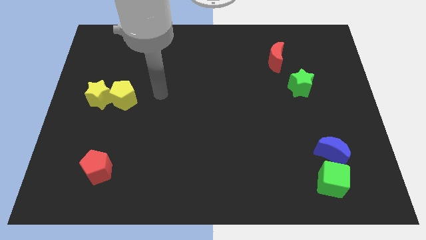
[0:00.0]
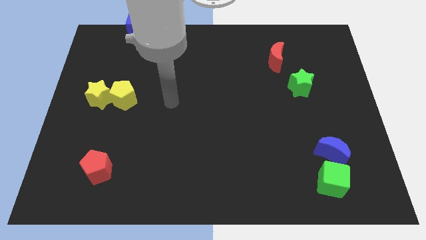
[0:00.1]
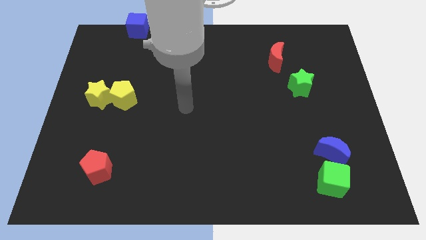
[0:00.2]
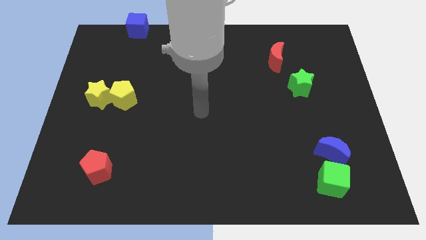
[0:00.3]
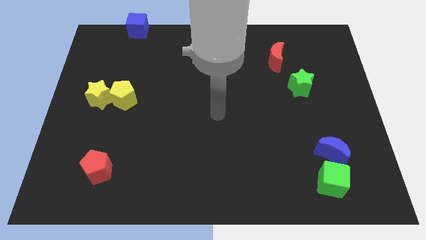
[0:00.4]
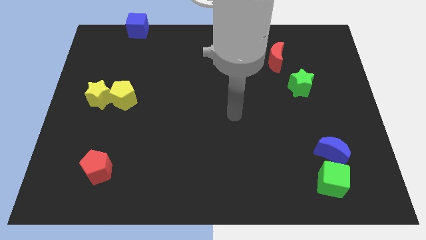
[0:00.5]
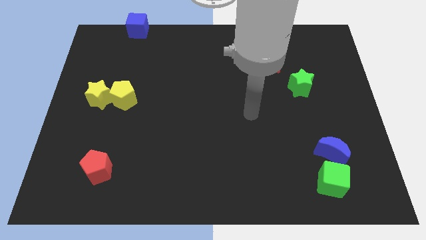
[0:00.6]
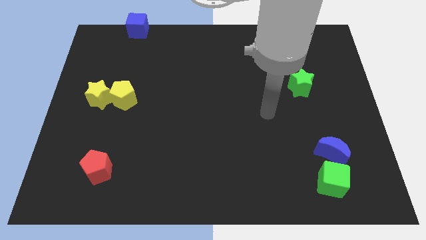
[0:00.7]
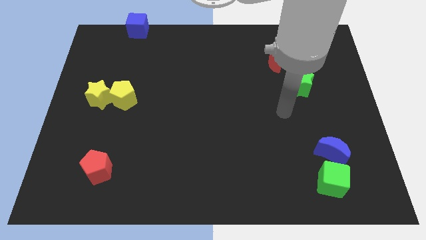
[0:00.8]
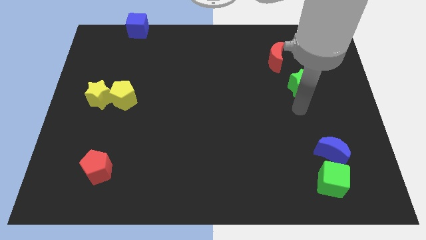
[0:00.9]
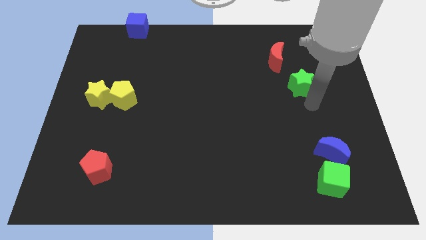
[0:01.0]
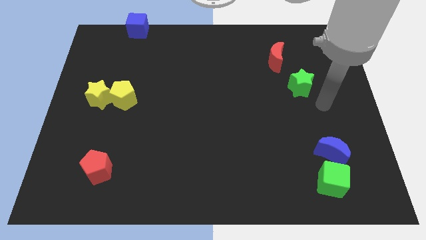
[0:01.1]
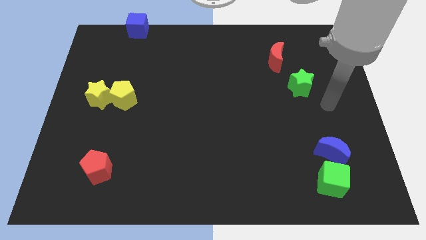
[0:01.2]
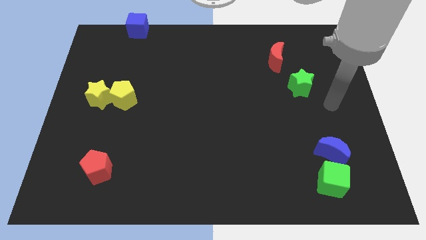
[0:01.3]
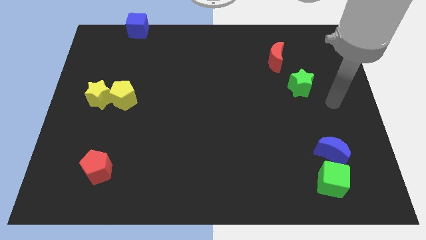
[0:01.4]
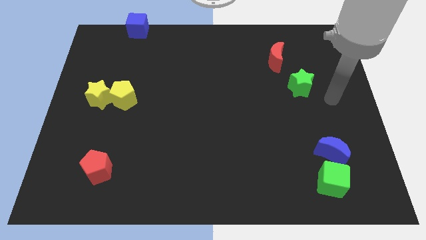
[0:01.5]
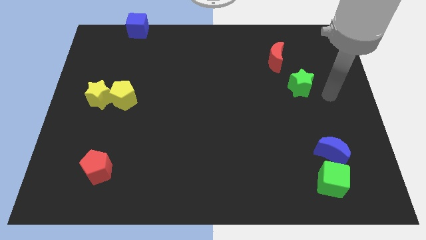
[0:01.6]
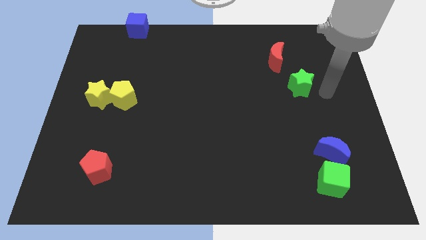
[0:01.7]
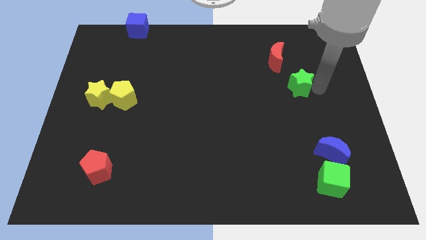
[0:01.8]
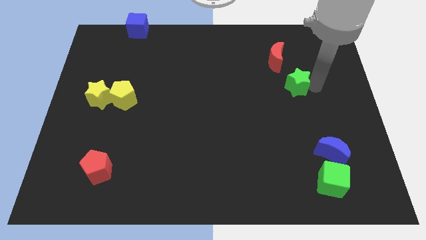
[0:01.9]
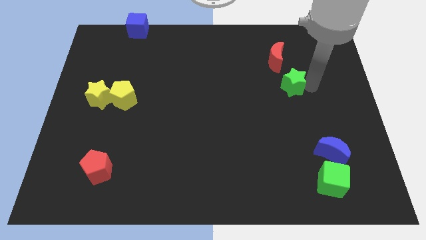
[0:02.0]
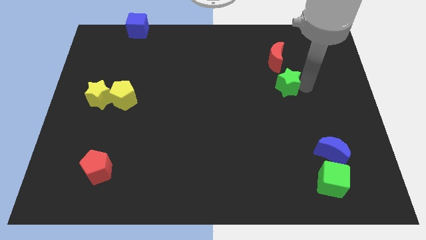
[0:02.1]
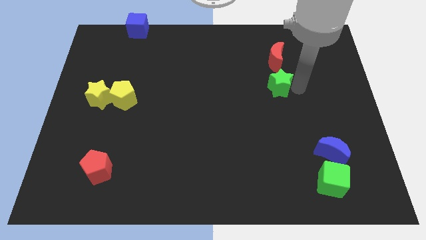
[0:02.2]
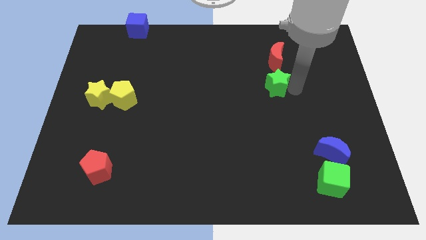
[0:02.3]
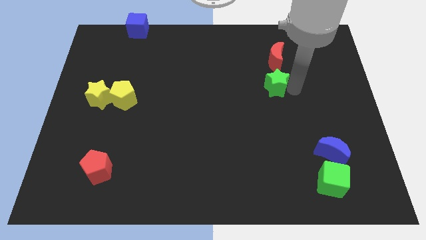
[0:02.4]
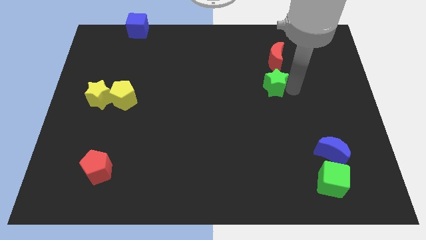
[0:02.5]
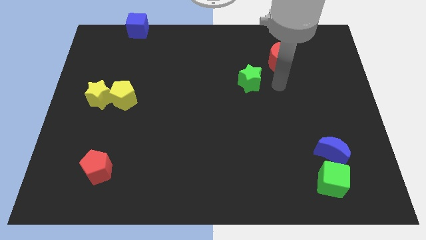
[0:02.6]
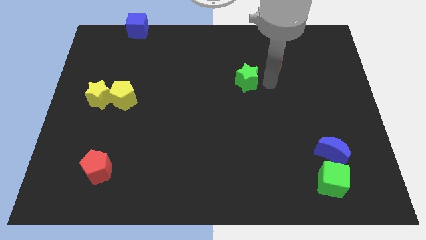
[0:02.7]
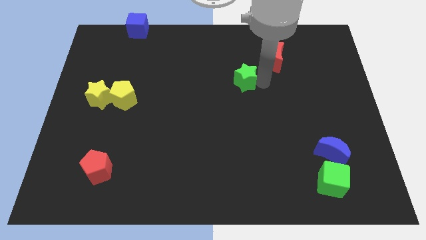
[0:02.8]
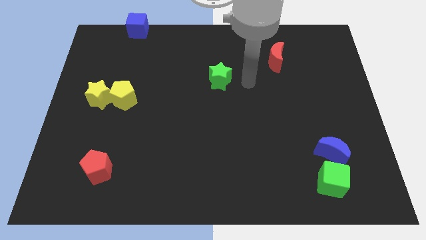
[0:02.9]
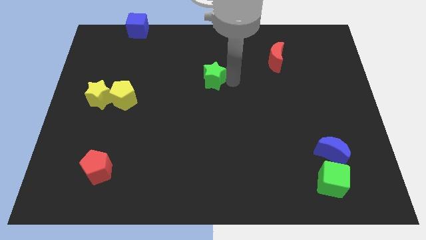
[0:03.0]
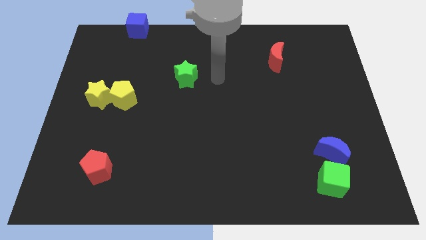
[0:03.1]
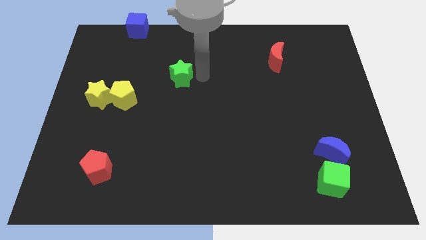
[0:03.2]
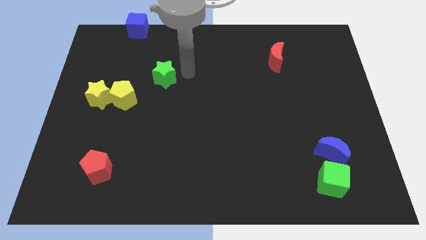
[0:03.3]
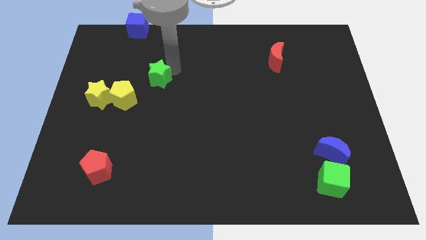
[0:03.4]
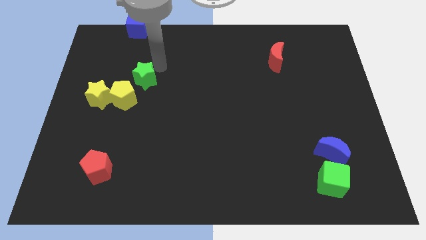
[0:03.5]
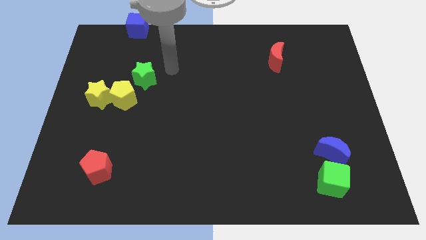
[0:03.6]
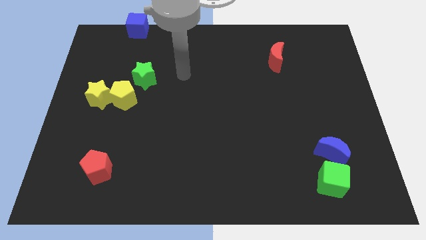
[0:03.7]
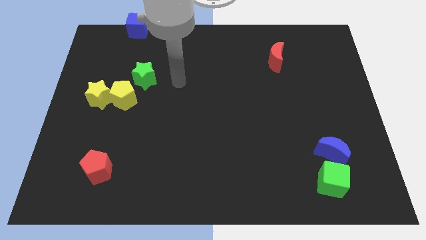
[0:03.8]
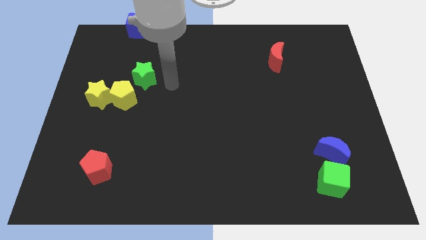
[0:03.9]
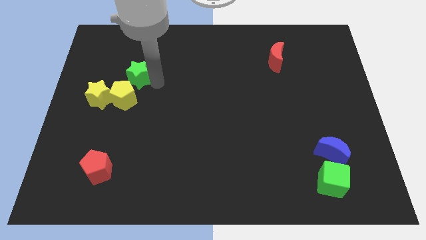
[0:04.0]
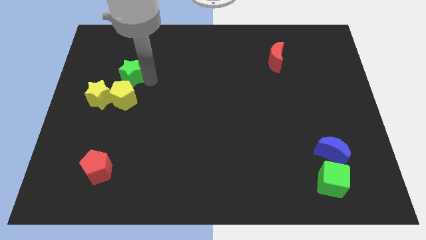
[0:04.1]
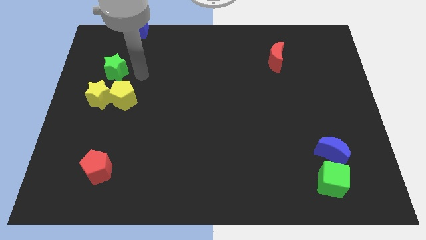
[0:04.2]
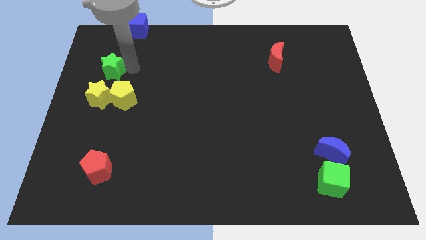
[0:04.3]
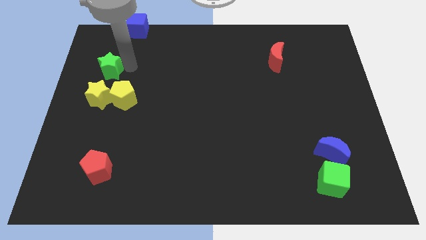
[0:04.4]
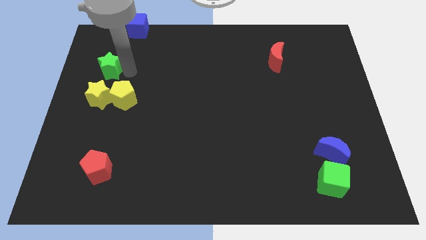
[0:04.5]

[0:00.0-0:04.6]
move the green star to the top of the yellow star

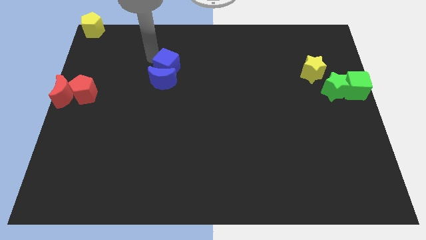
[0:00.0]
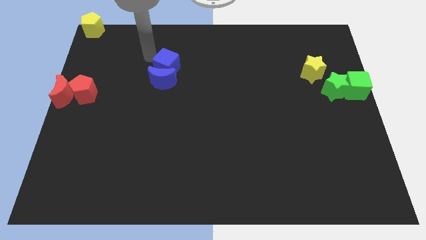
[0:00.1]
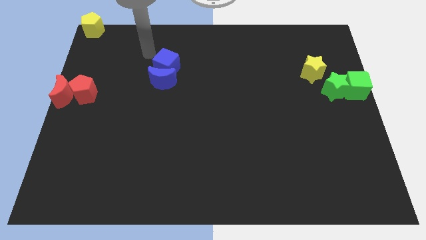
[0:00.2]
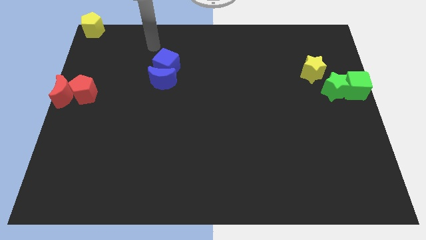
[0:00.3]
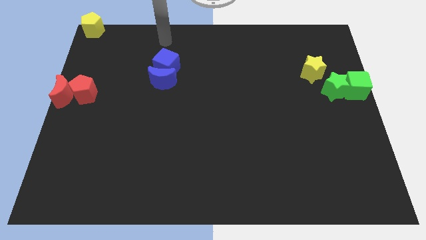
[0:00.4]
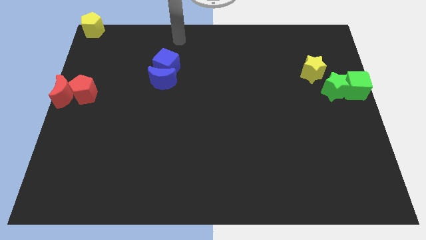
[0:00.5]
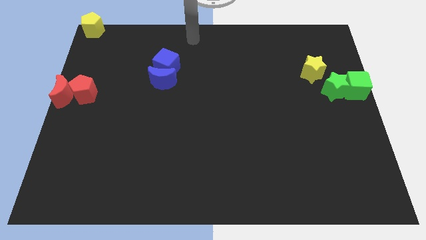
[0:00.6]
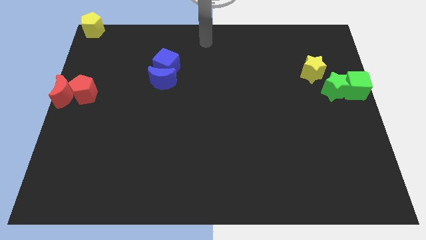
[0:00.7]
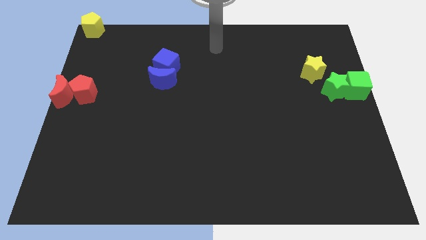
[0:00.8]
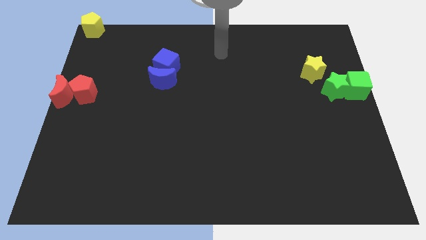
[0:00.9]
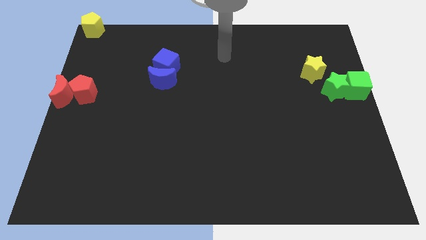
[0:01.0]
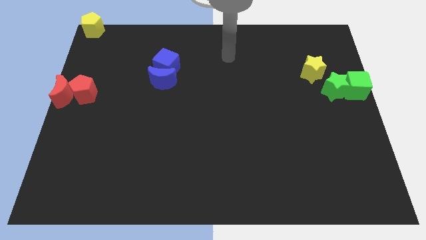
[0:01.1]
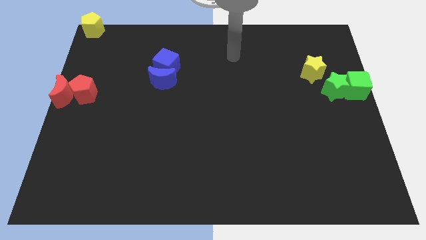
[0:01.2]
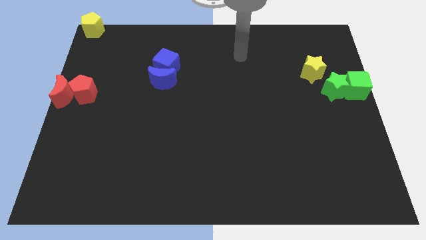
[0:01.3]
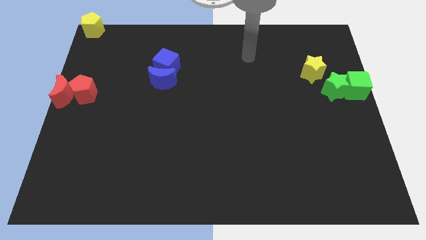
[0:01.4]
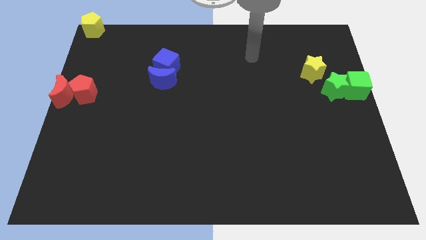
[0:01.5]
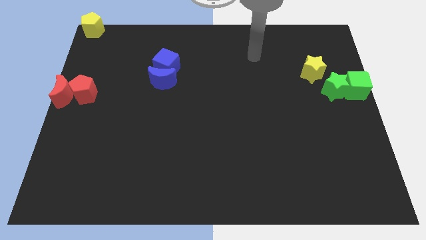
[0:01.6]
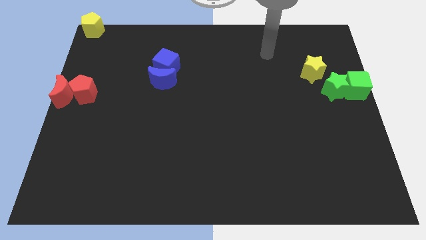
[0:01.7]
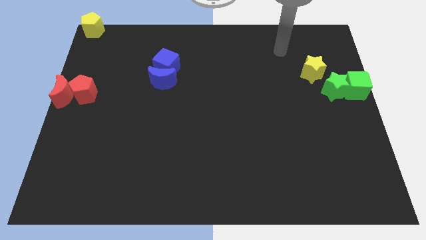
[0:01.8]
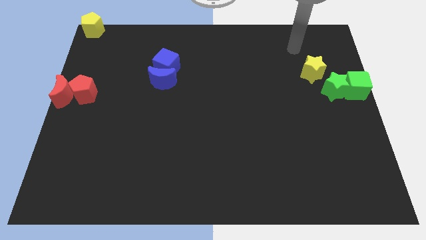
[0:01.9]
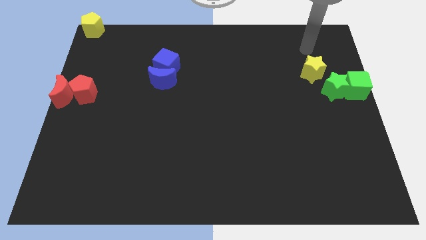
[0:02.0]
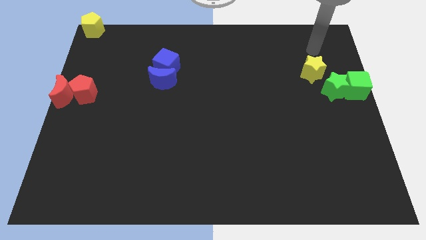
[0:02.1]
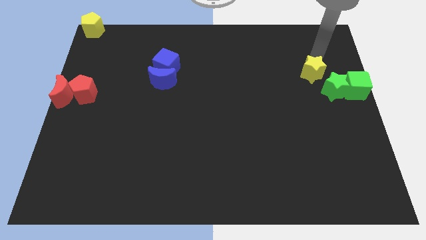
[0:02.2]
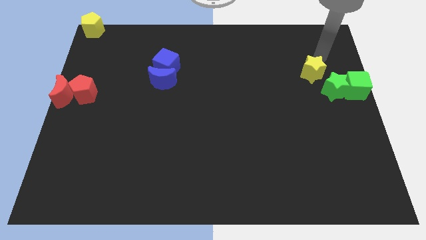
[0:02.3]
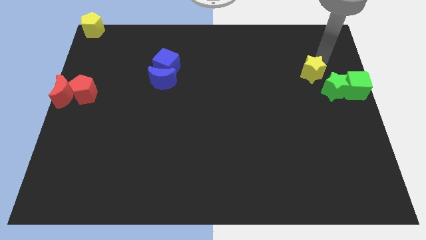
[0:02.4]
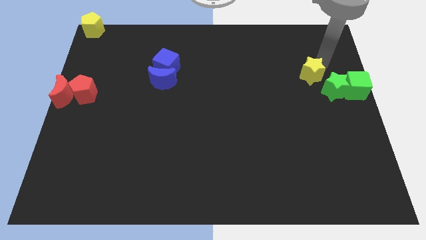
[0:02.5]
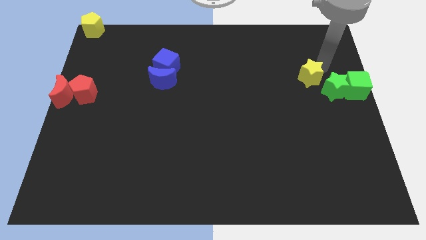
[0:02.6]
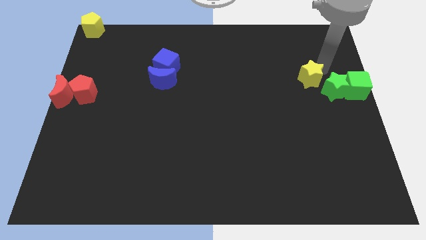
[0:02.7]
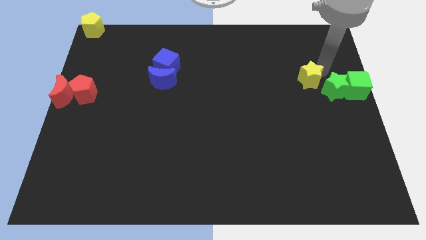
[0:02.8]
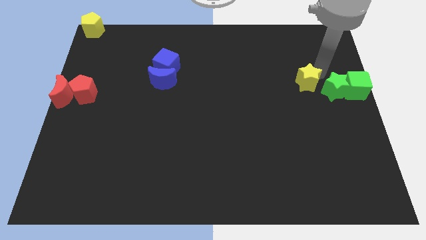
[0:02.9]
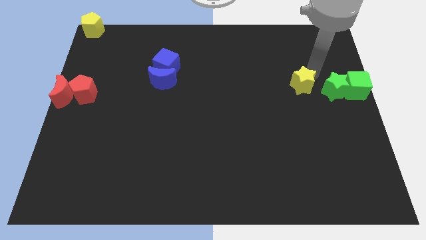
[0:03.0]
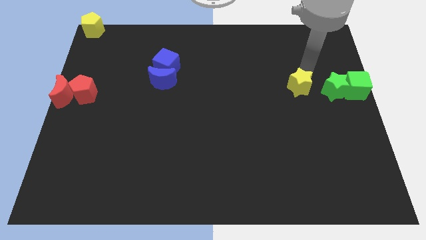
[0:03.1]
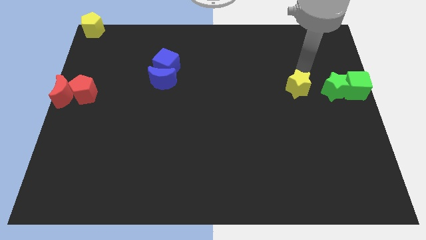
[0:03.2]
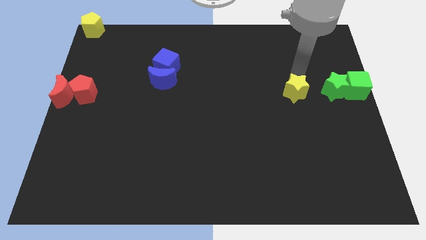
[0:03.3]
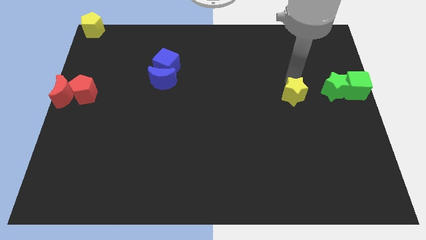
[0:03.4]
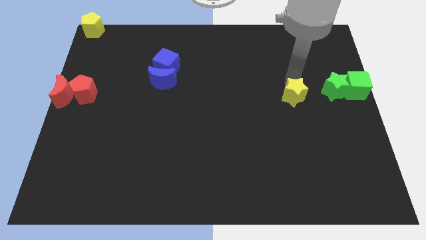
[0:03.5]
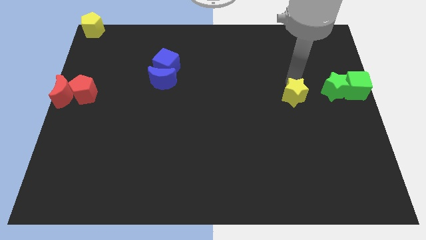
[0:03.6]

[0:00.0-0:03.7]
move your arm away from the blue cube

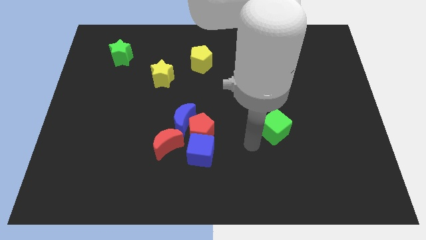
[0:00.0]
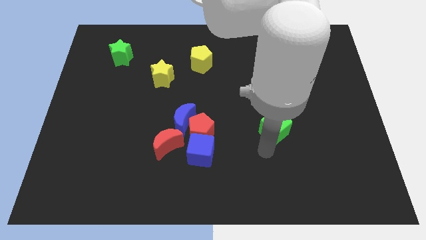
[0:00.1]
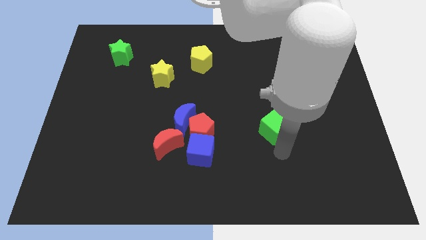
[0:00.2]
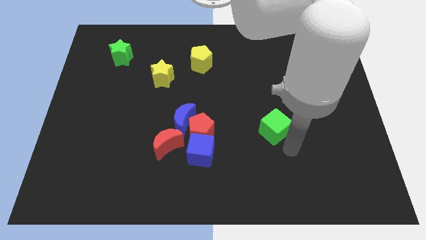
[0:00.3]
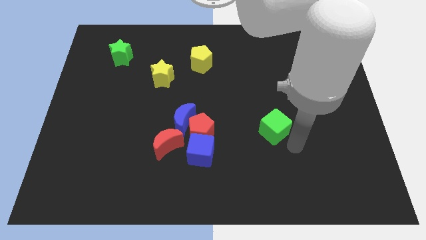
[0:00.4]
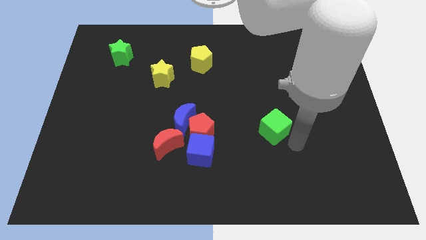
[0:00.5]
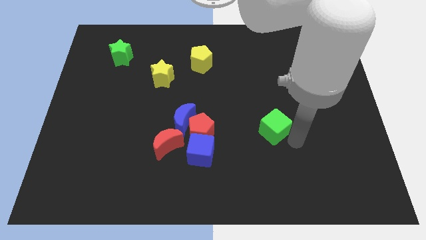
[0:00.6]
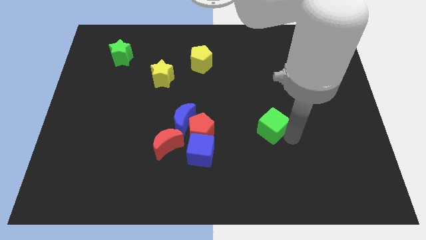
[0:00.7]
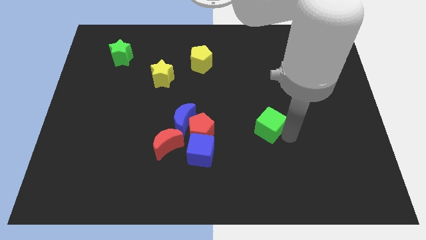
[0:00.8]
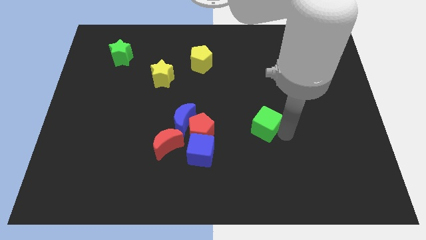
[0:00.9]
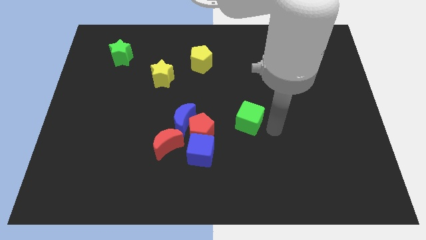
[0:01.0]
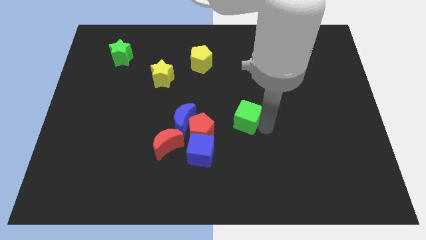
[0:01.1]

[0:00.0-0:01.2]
push the green cube slightly to the left
